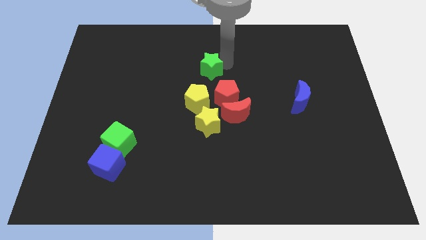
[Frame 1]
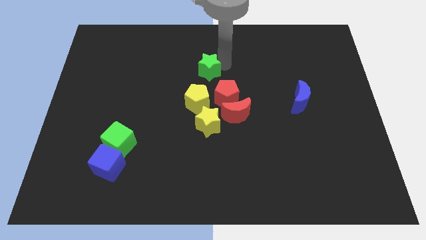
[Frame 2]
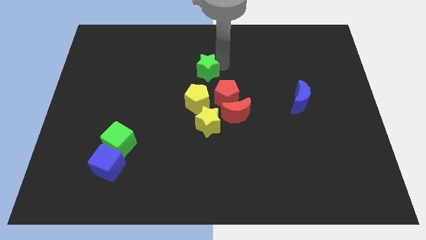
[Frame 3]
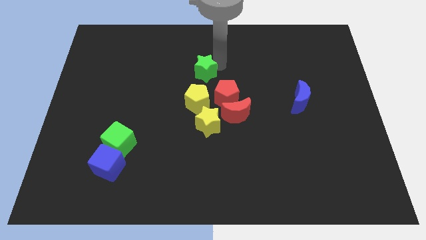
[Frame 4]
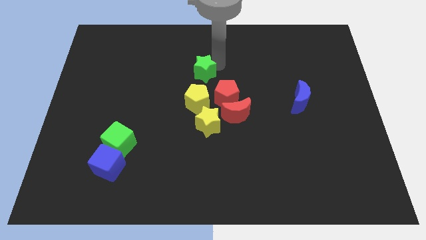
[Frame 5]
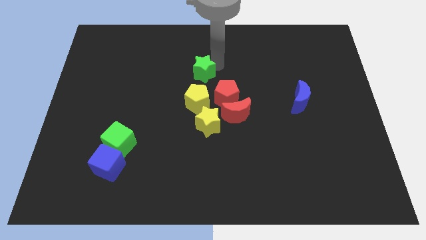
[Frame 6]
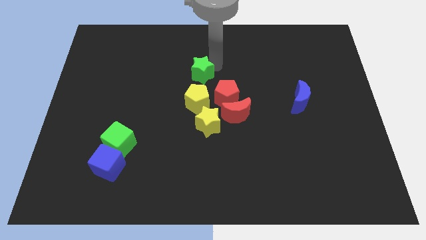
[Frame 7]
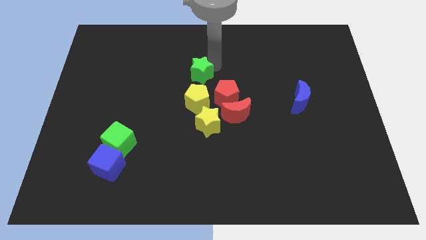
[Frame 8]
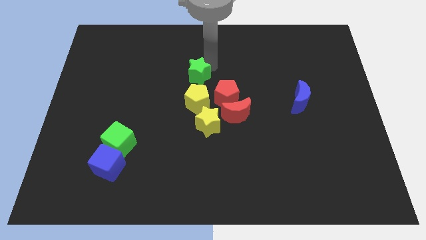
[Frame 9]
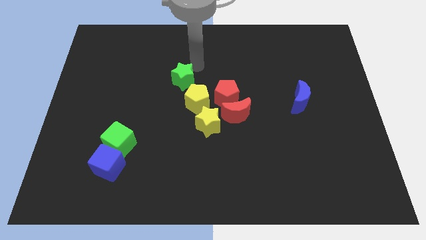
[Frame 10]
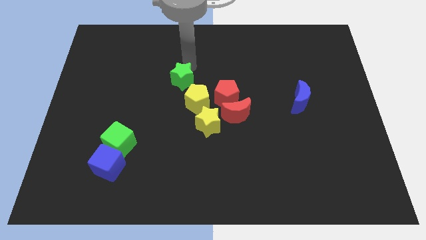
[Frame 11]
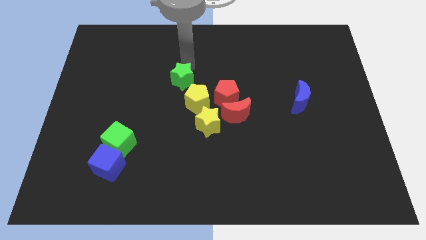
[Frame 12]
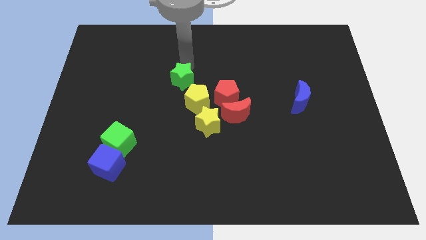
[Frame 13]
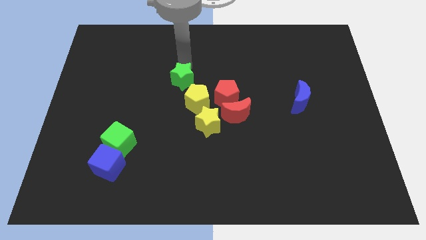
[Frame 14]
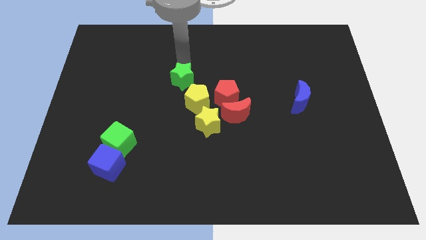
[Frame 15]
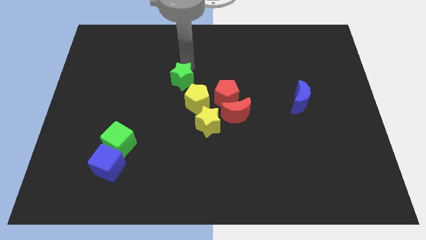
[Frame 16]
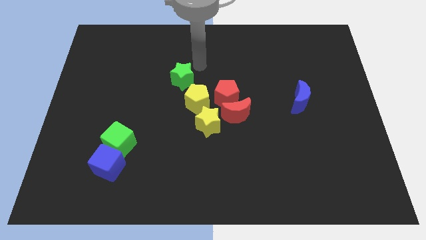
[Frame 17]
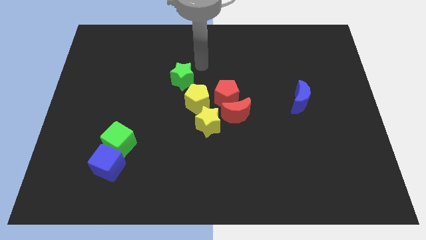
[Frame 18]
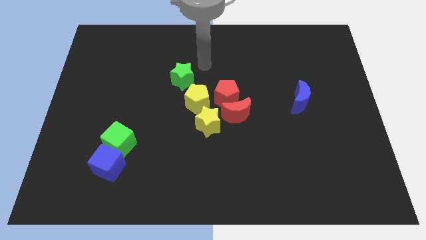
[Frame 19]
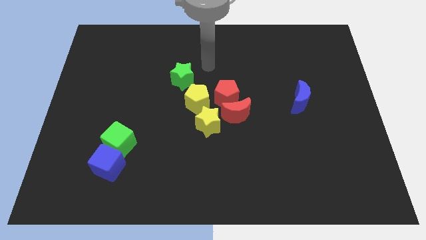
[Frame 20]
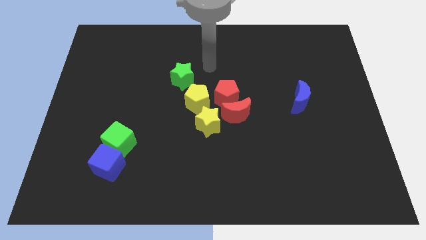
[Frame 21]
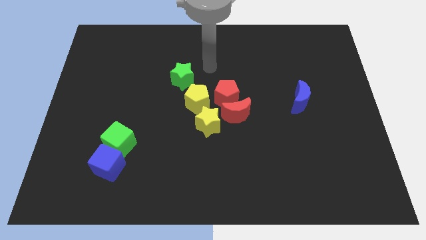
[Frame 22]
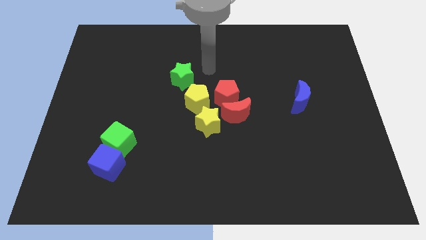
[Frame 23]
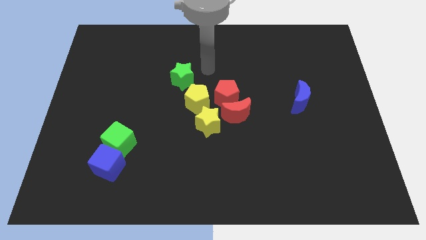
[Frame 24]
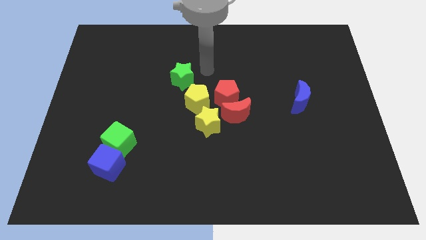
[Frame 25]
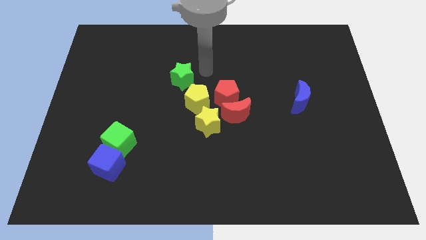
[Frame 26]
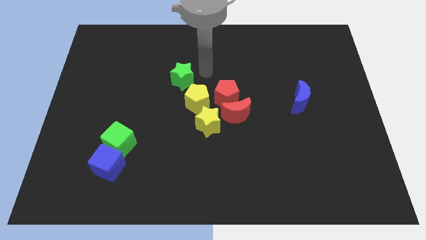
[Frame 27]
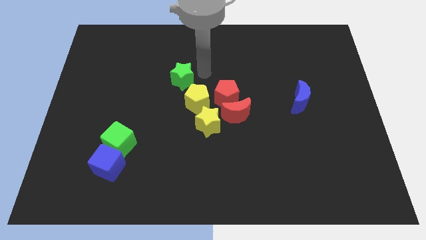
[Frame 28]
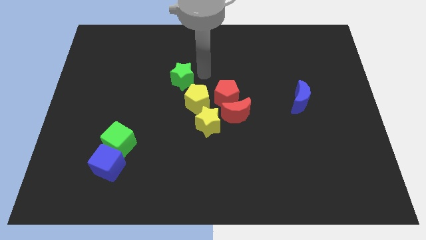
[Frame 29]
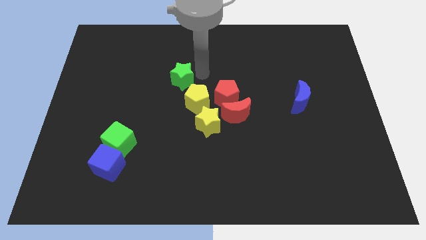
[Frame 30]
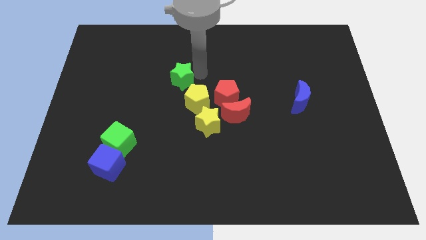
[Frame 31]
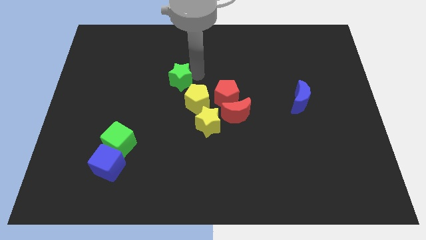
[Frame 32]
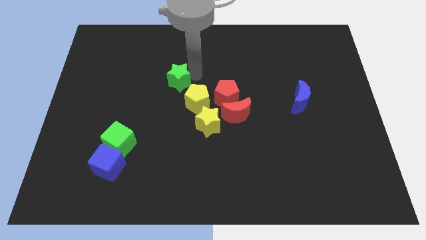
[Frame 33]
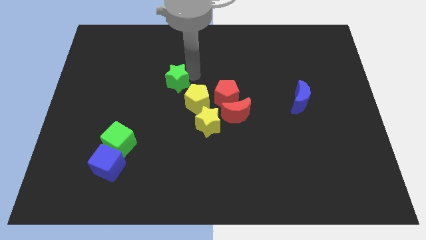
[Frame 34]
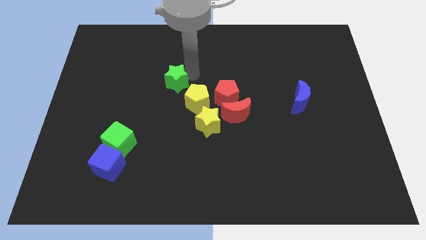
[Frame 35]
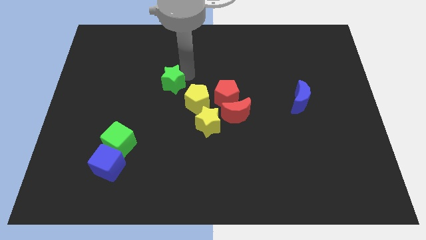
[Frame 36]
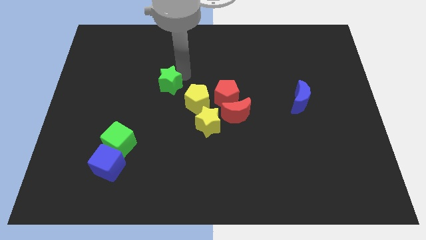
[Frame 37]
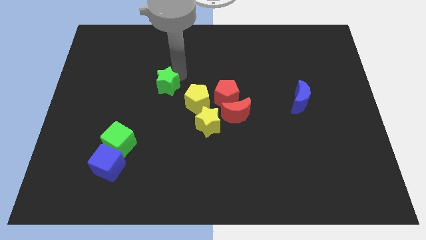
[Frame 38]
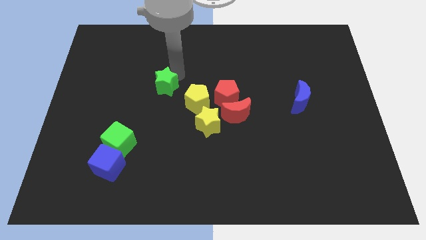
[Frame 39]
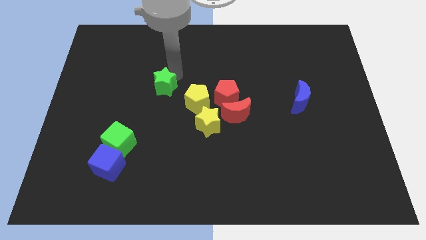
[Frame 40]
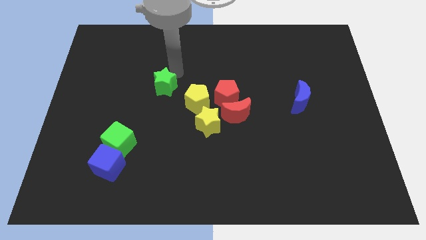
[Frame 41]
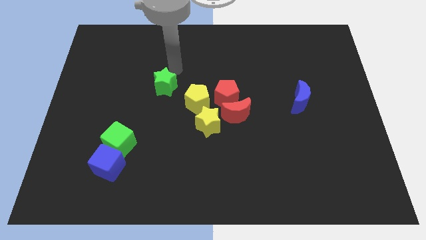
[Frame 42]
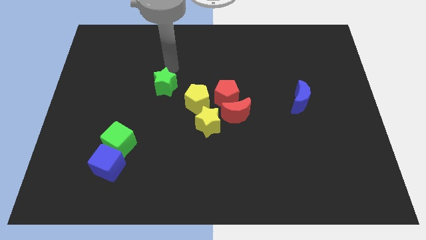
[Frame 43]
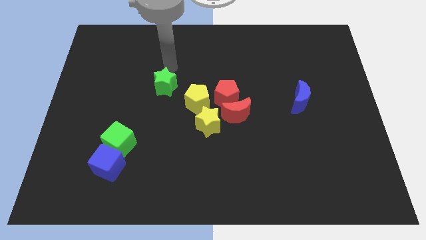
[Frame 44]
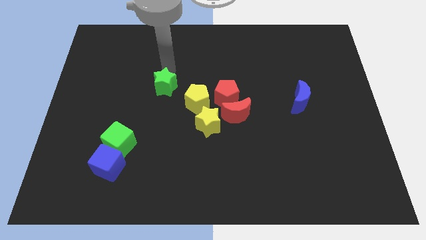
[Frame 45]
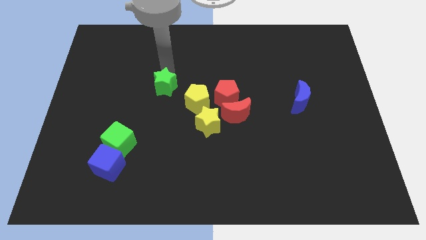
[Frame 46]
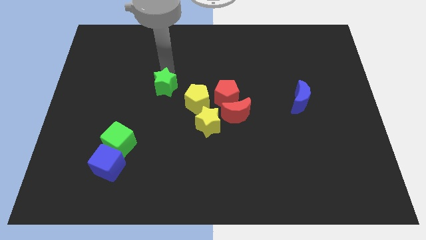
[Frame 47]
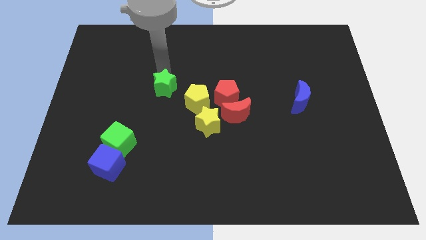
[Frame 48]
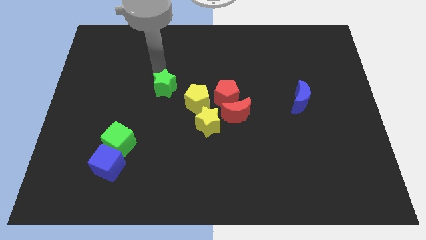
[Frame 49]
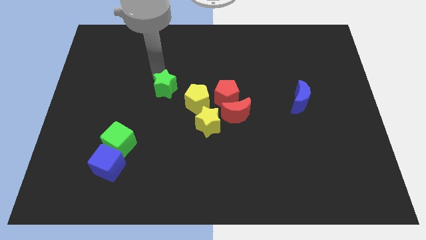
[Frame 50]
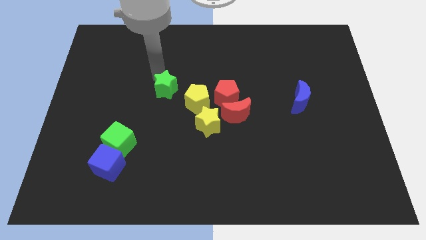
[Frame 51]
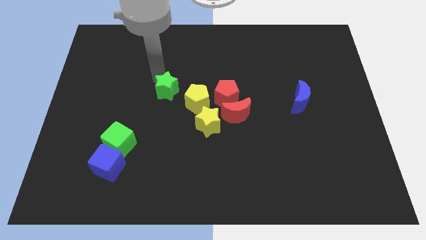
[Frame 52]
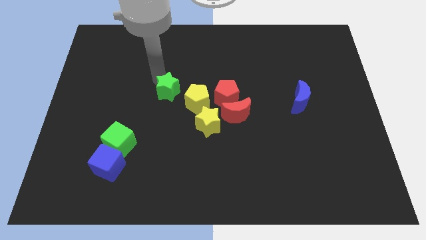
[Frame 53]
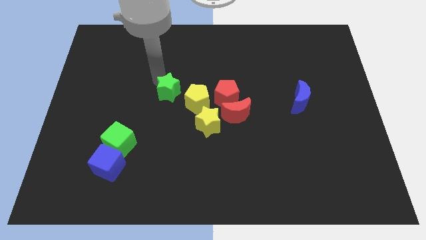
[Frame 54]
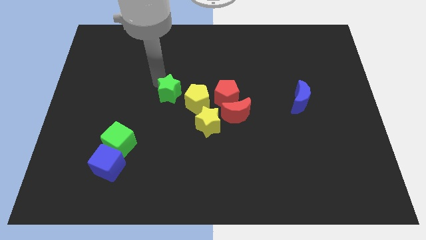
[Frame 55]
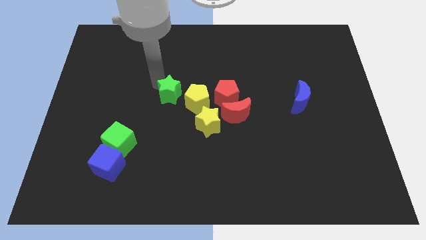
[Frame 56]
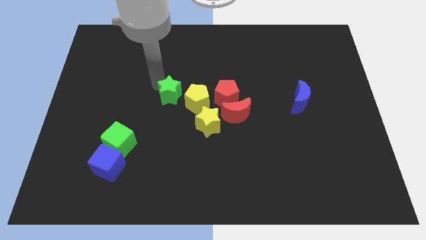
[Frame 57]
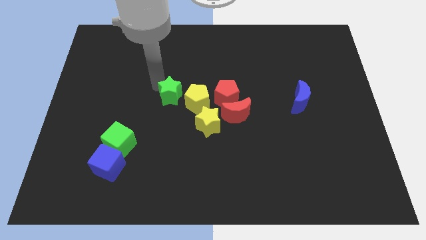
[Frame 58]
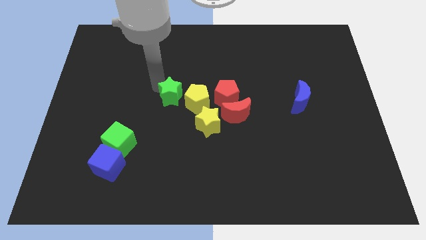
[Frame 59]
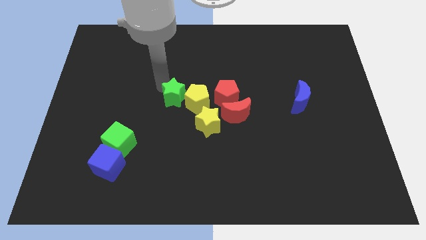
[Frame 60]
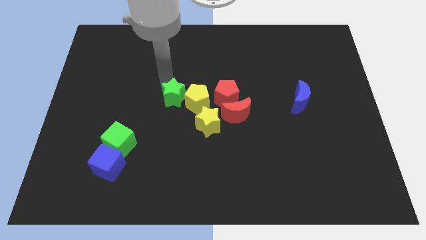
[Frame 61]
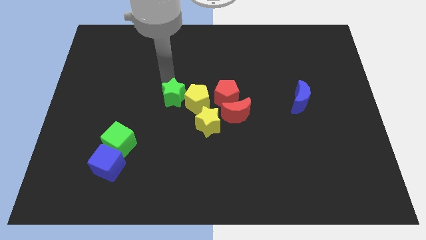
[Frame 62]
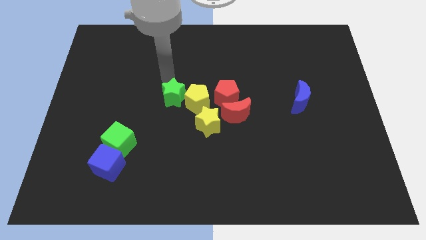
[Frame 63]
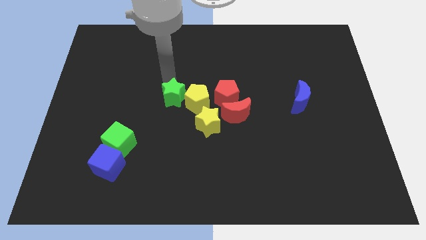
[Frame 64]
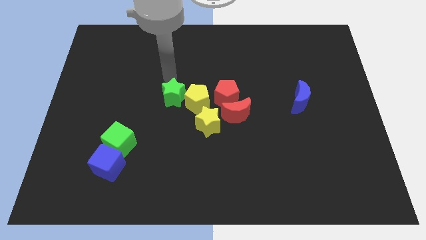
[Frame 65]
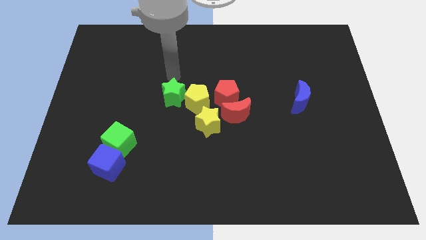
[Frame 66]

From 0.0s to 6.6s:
push the green star to the left of the yellow pentagon

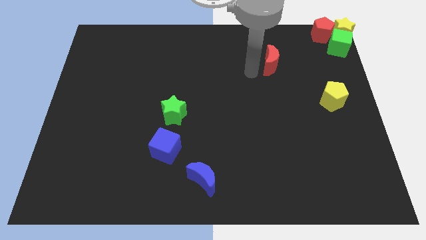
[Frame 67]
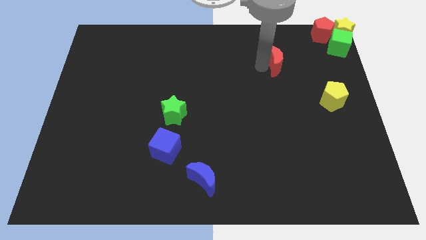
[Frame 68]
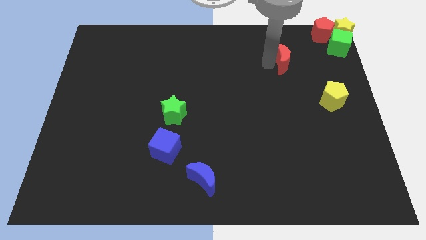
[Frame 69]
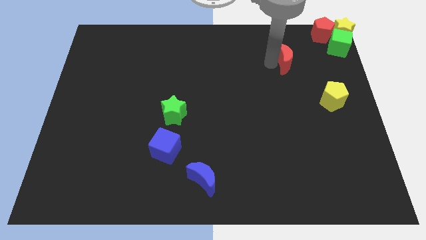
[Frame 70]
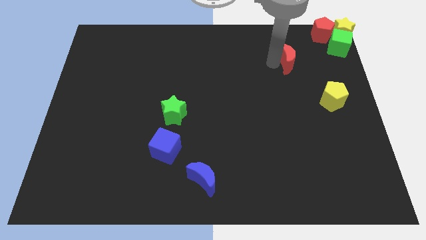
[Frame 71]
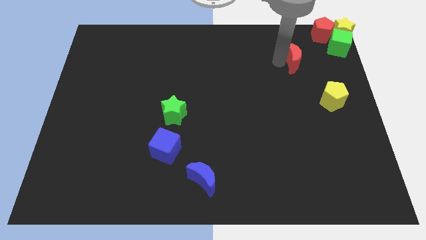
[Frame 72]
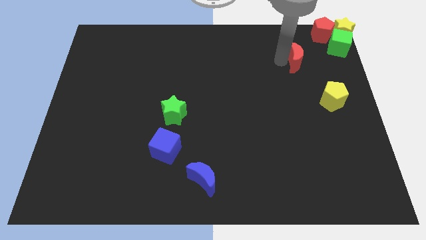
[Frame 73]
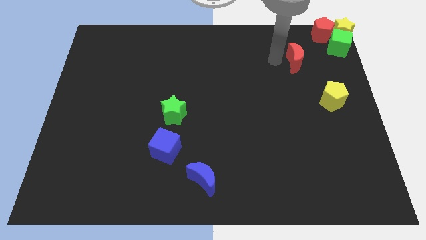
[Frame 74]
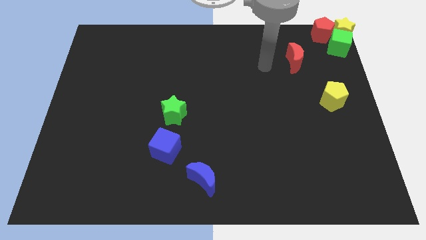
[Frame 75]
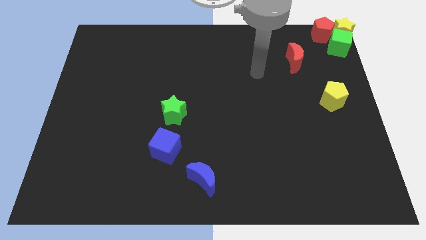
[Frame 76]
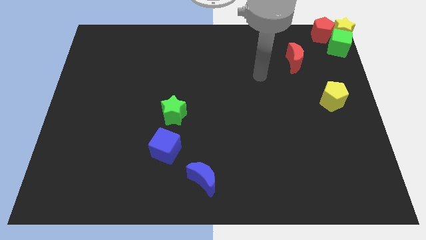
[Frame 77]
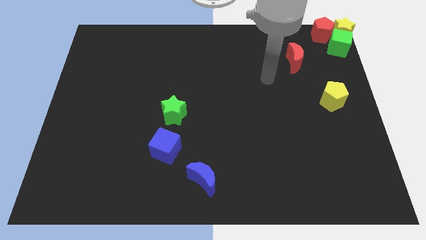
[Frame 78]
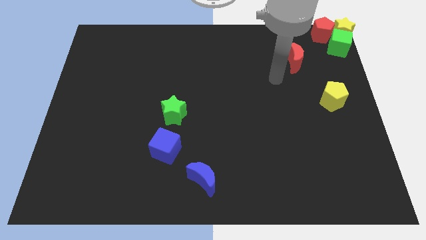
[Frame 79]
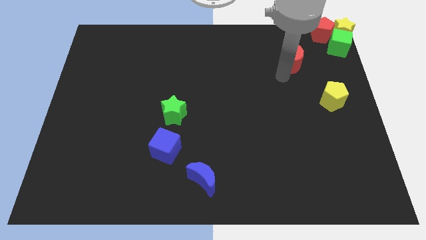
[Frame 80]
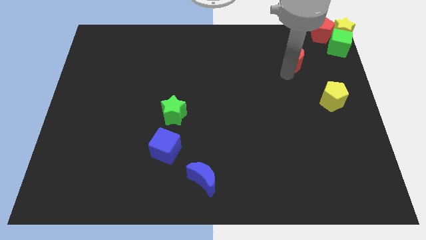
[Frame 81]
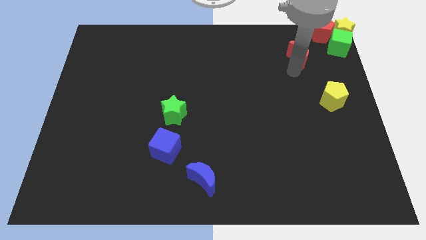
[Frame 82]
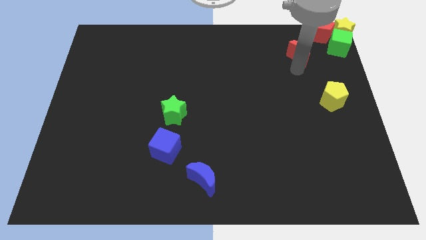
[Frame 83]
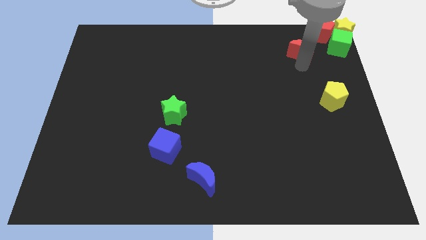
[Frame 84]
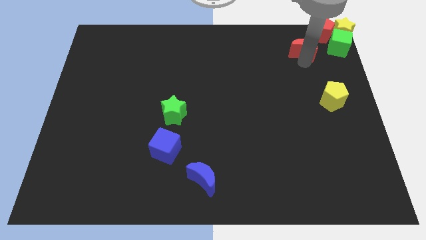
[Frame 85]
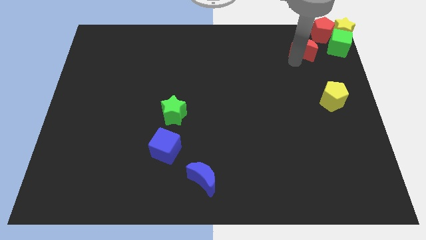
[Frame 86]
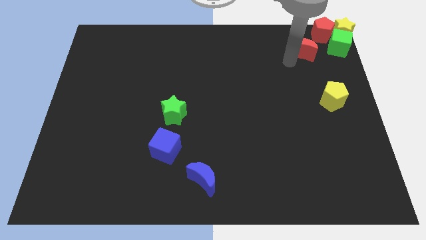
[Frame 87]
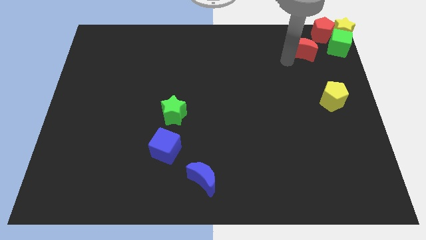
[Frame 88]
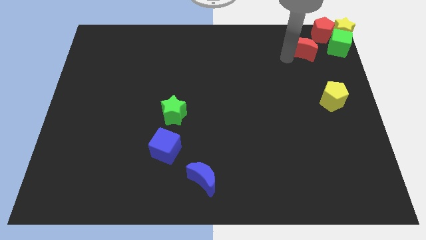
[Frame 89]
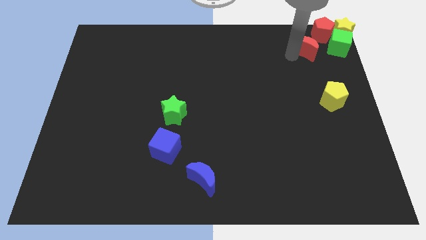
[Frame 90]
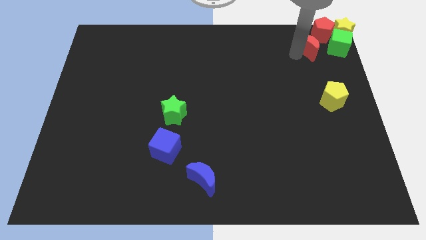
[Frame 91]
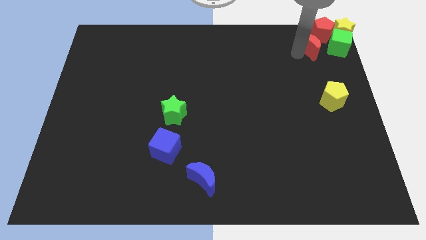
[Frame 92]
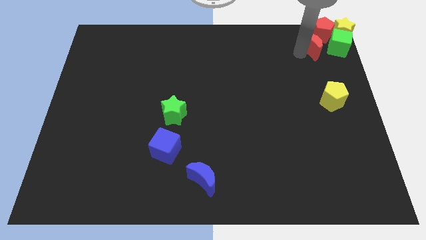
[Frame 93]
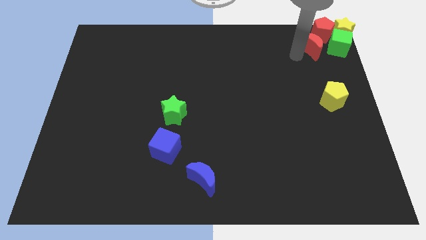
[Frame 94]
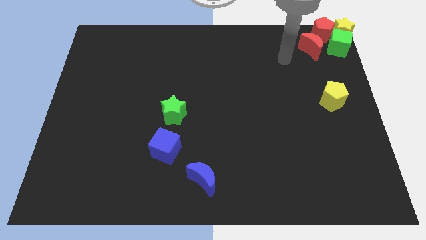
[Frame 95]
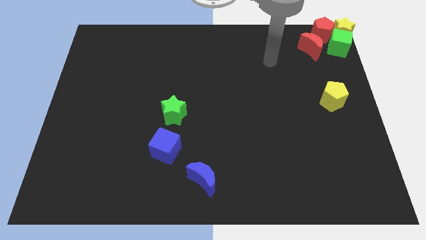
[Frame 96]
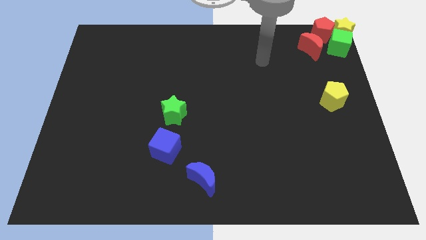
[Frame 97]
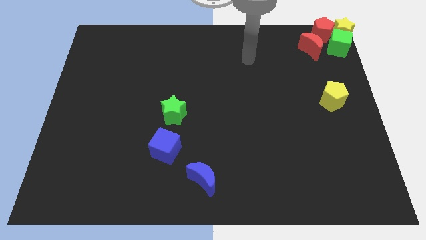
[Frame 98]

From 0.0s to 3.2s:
take the red crescent close to the red pentagon
